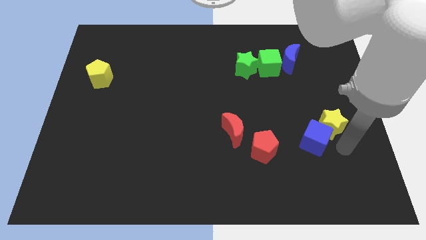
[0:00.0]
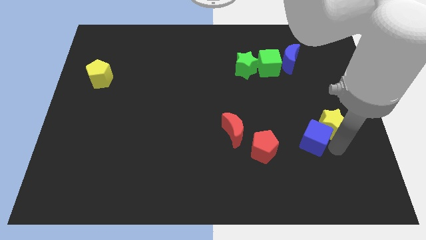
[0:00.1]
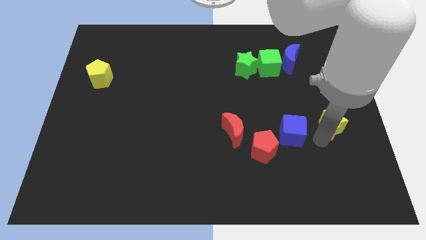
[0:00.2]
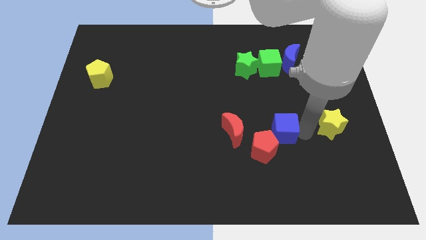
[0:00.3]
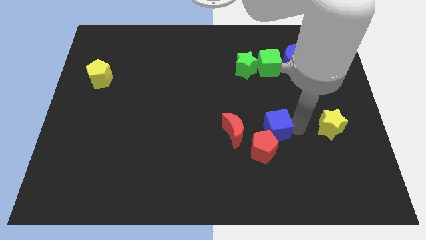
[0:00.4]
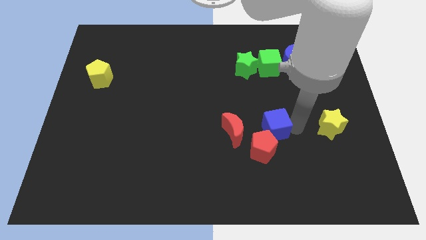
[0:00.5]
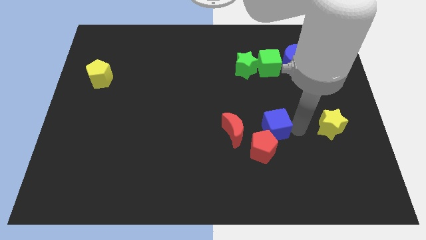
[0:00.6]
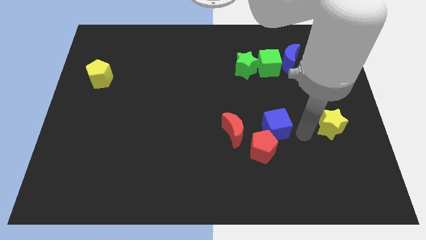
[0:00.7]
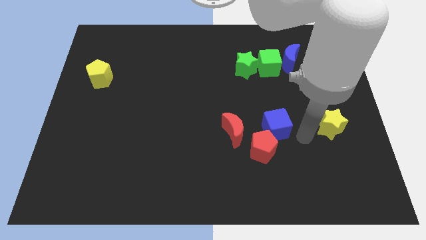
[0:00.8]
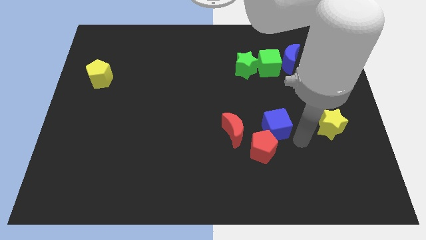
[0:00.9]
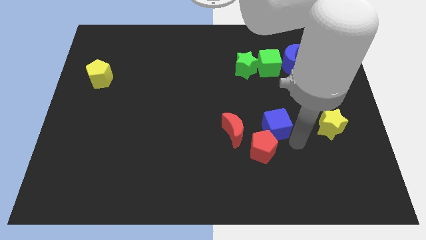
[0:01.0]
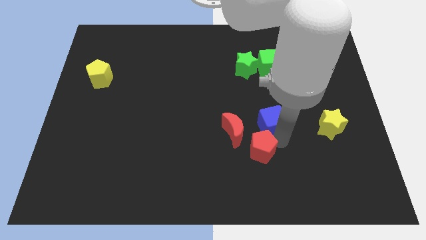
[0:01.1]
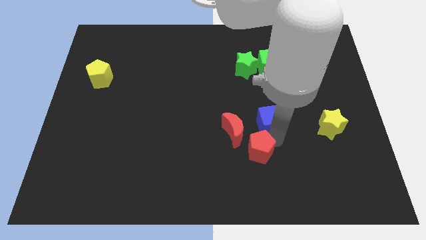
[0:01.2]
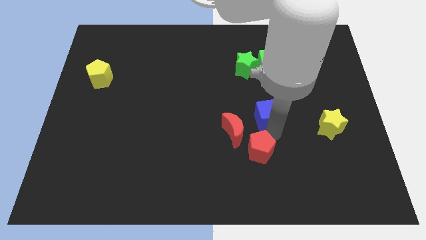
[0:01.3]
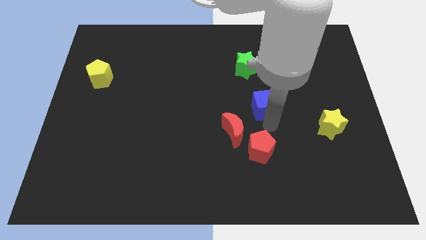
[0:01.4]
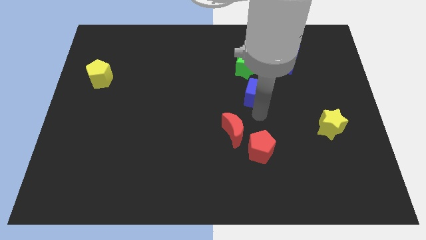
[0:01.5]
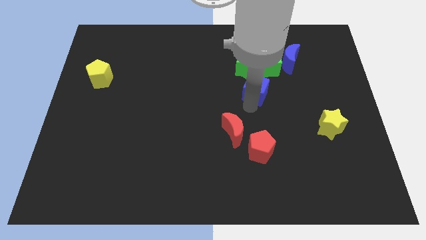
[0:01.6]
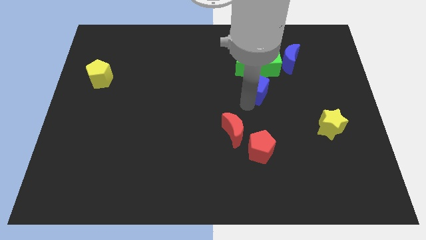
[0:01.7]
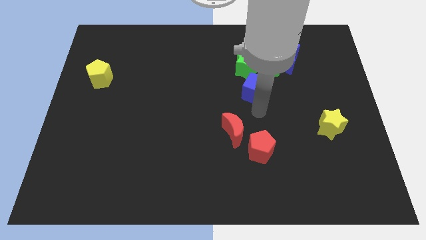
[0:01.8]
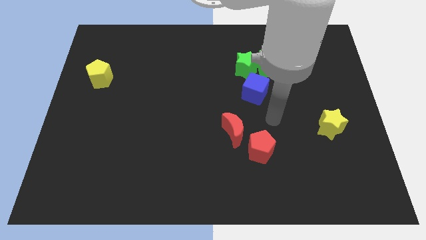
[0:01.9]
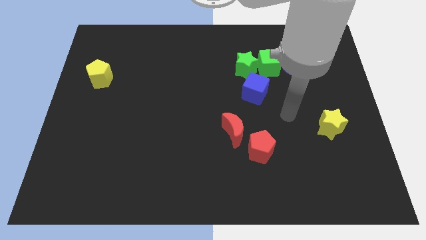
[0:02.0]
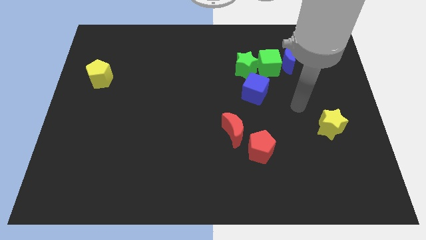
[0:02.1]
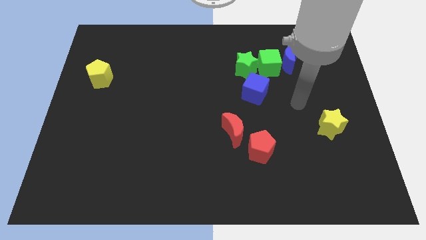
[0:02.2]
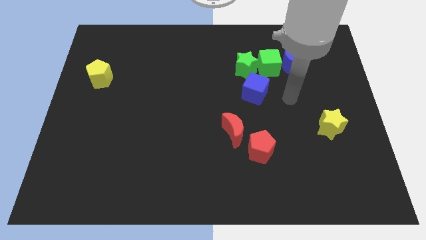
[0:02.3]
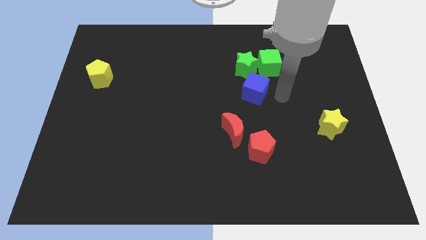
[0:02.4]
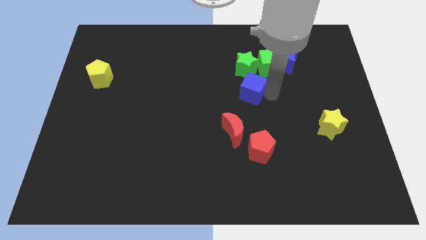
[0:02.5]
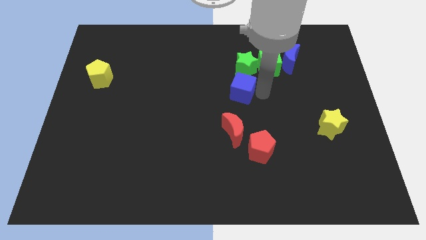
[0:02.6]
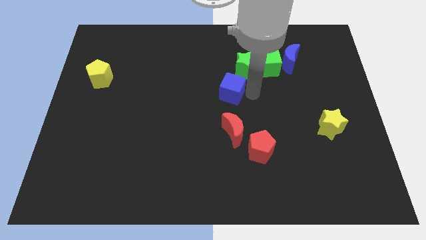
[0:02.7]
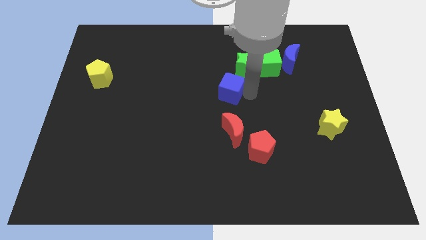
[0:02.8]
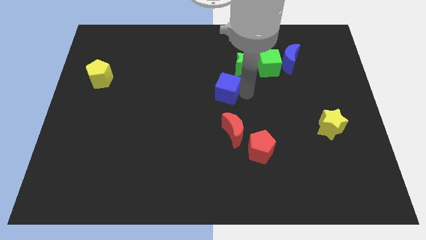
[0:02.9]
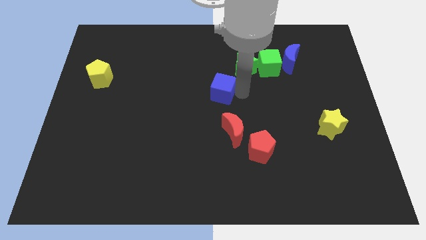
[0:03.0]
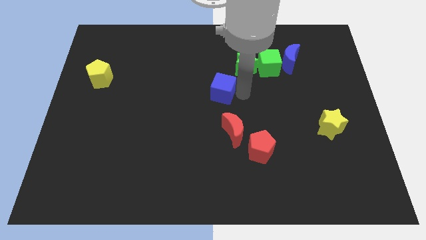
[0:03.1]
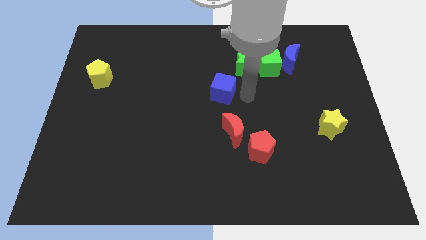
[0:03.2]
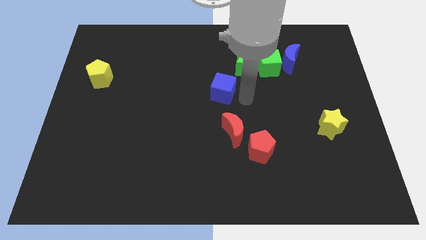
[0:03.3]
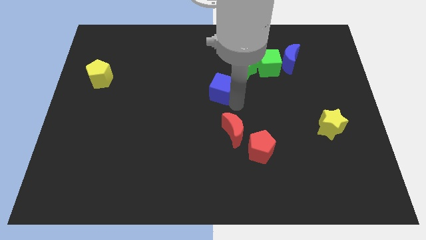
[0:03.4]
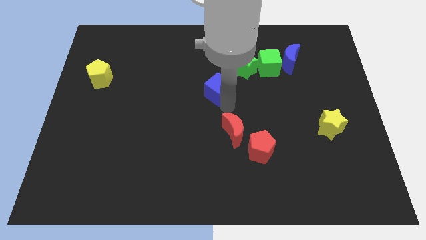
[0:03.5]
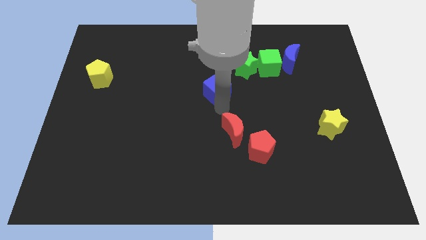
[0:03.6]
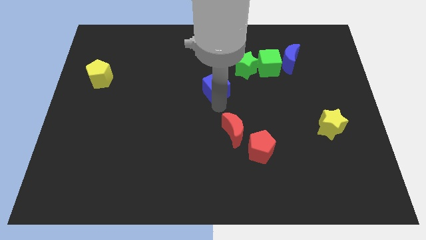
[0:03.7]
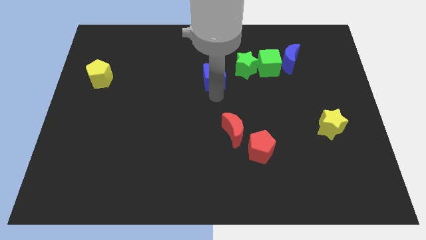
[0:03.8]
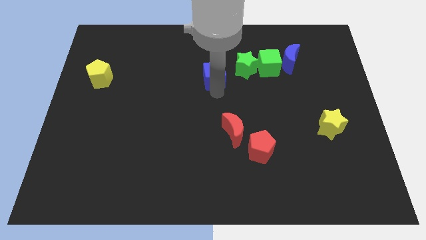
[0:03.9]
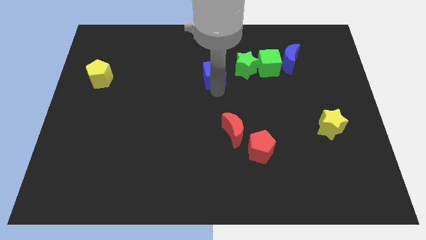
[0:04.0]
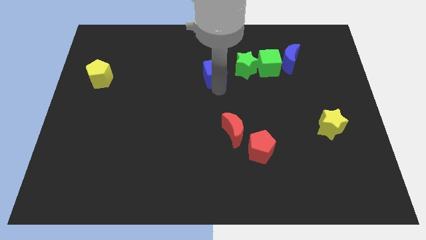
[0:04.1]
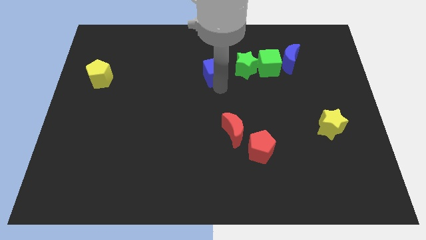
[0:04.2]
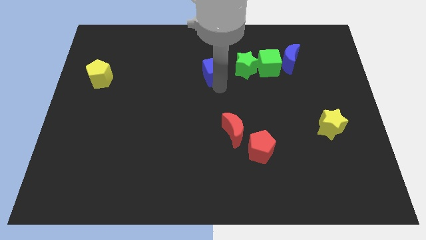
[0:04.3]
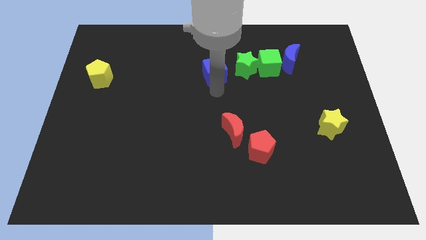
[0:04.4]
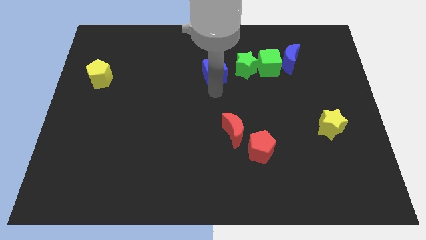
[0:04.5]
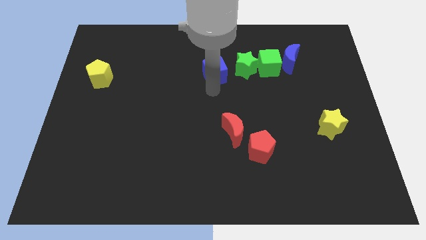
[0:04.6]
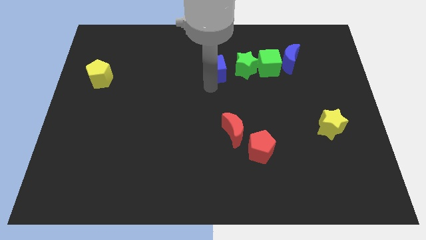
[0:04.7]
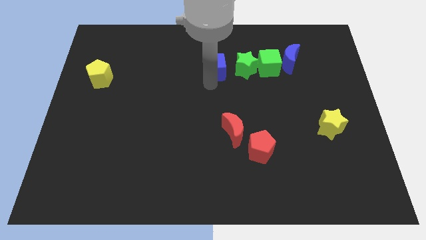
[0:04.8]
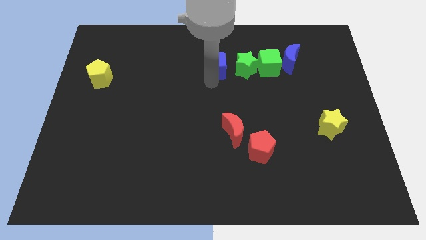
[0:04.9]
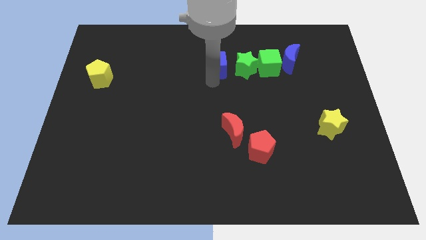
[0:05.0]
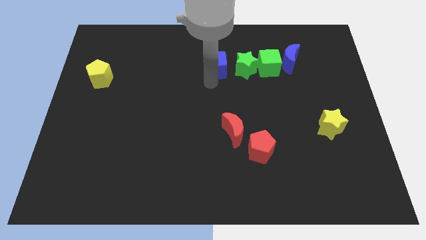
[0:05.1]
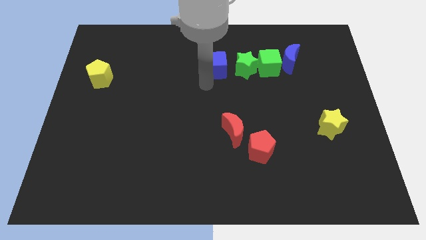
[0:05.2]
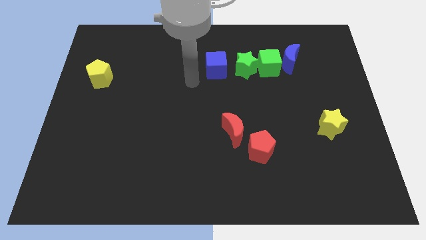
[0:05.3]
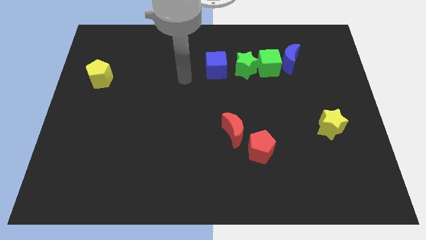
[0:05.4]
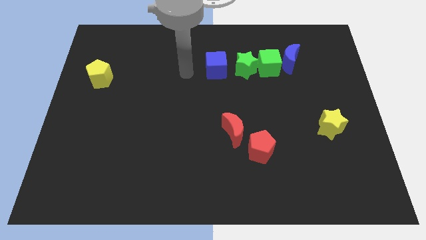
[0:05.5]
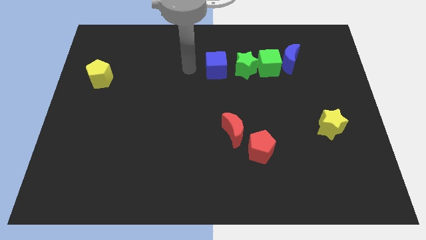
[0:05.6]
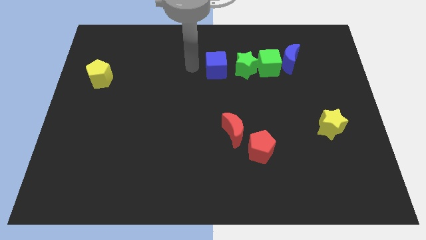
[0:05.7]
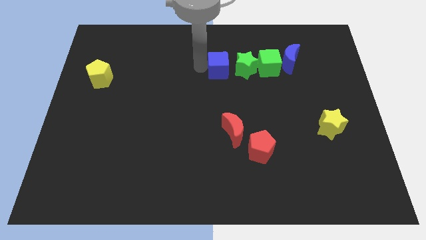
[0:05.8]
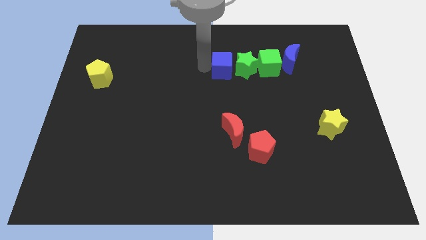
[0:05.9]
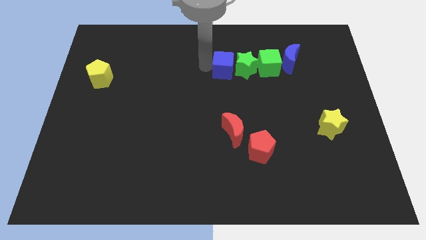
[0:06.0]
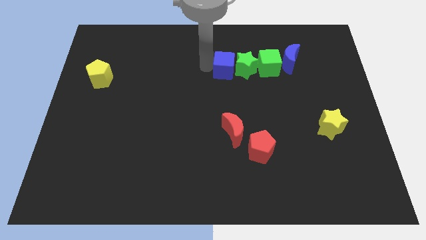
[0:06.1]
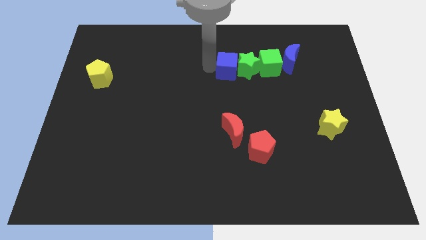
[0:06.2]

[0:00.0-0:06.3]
push the blue cube into the left of green star

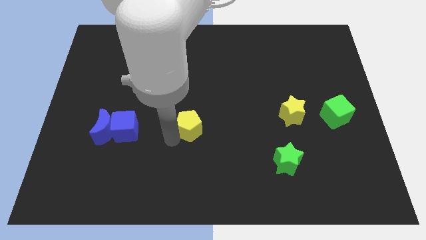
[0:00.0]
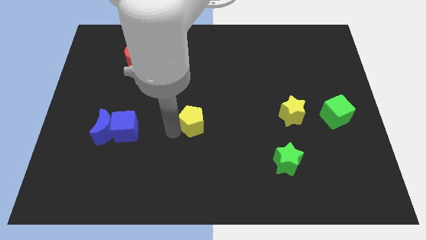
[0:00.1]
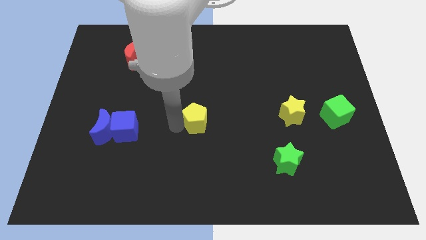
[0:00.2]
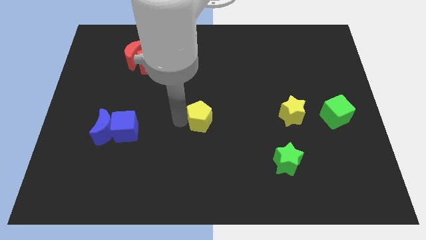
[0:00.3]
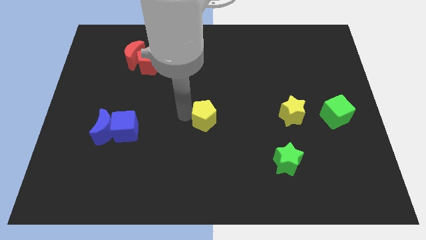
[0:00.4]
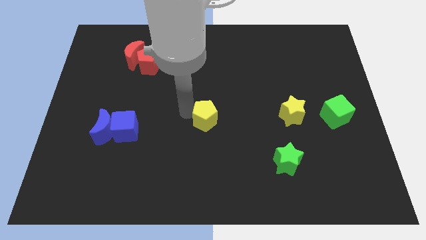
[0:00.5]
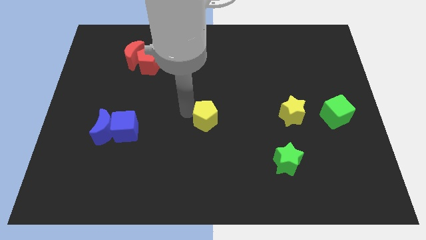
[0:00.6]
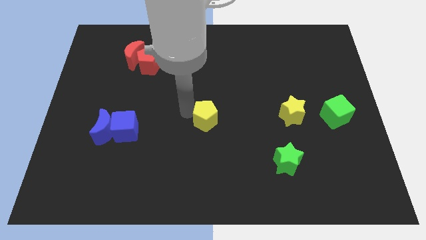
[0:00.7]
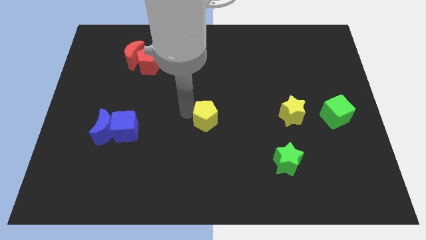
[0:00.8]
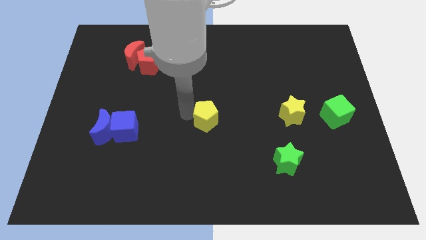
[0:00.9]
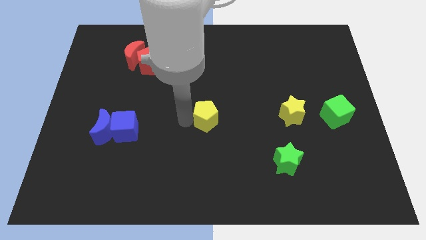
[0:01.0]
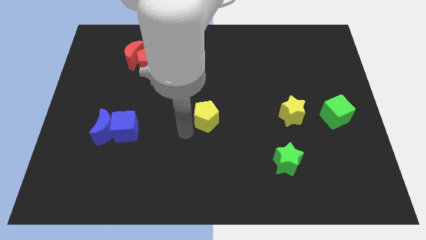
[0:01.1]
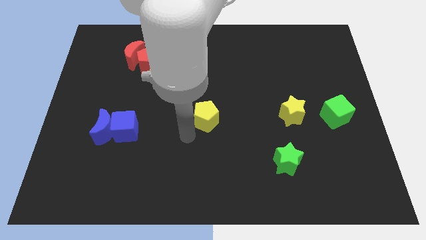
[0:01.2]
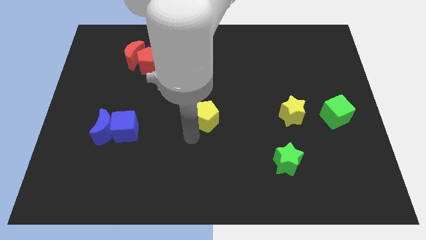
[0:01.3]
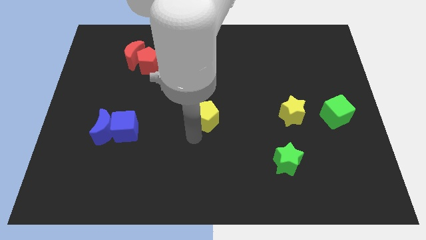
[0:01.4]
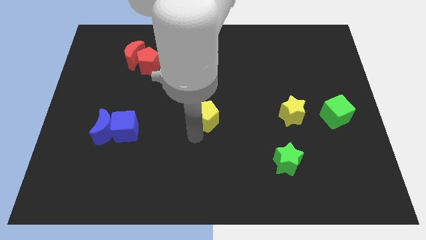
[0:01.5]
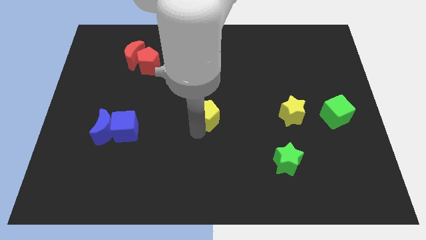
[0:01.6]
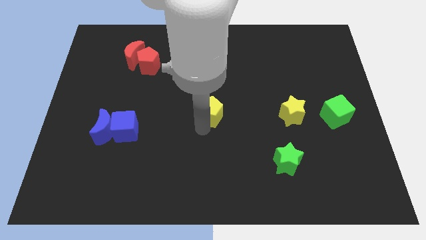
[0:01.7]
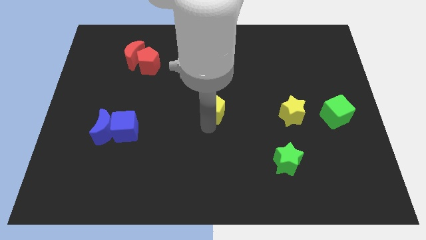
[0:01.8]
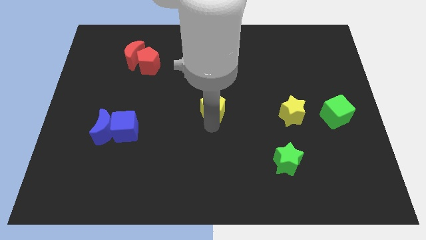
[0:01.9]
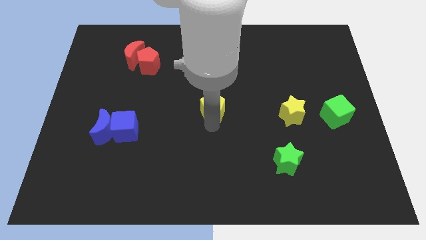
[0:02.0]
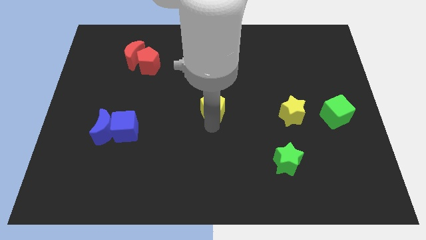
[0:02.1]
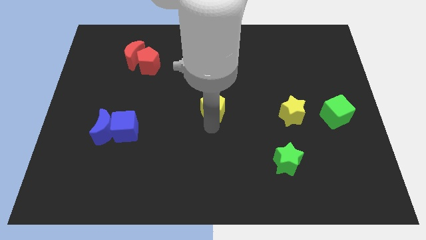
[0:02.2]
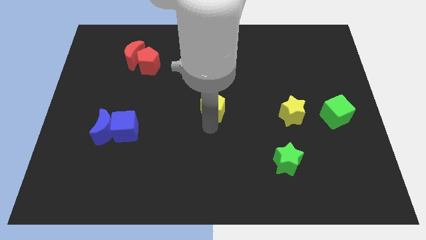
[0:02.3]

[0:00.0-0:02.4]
place the yellow pentagon in between the red pentagon and green star

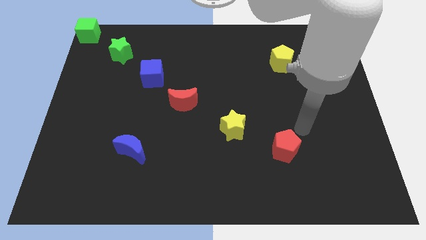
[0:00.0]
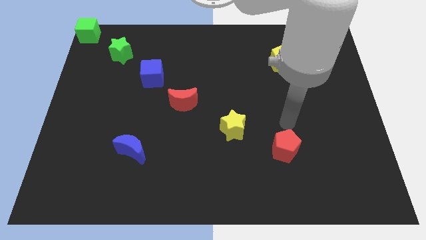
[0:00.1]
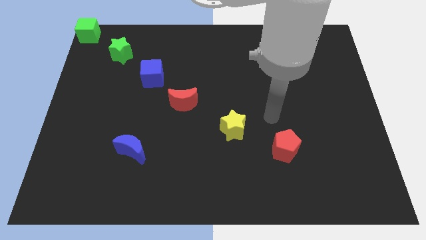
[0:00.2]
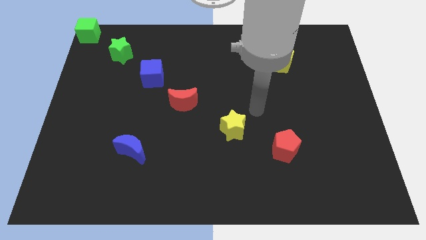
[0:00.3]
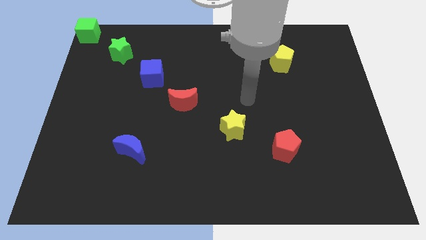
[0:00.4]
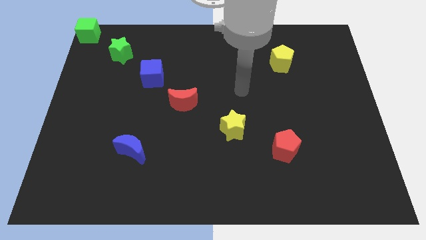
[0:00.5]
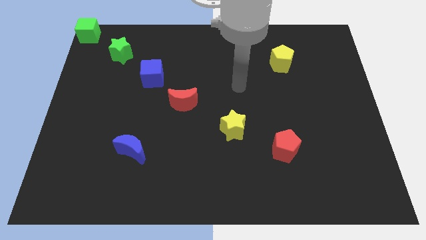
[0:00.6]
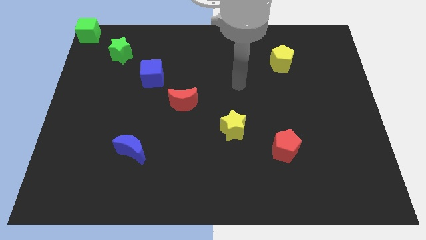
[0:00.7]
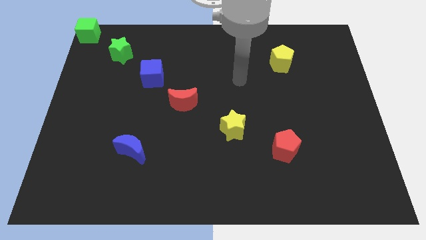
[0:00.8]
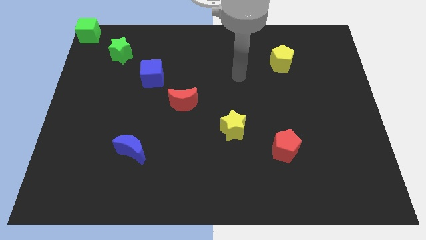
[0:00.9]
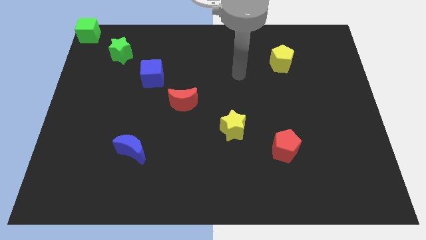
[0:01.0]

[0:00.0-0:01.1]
go away from the red pentagon
